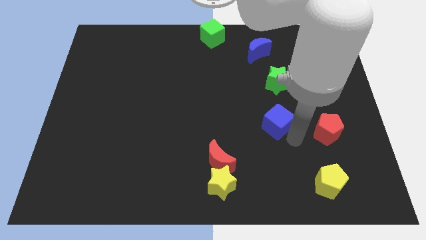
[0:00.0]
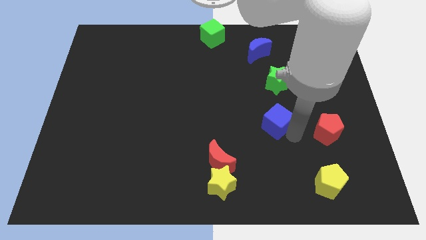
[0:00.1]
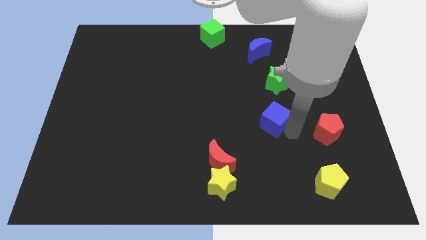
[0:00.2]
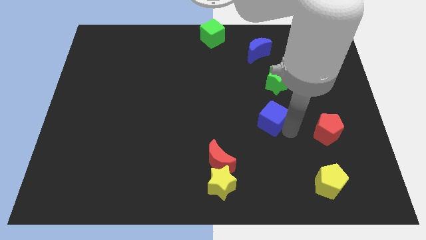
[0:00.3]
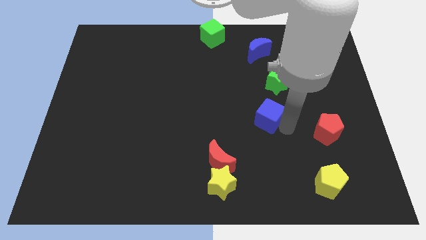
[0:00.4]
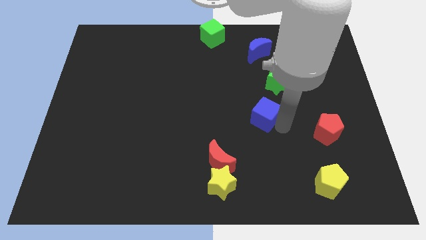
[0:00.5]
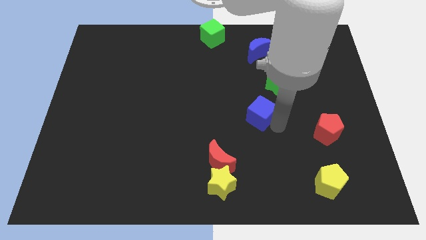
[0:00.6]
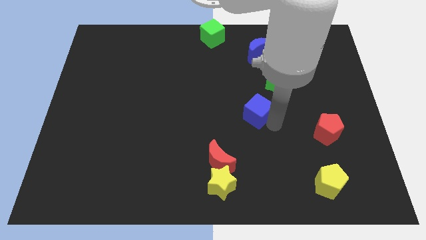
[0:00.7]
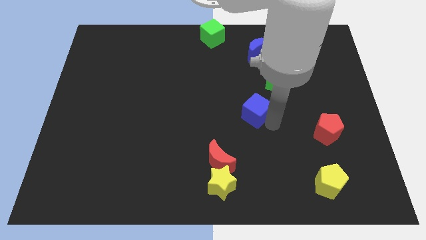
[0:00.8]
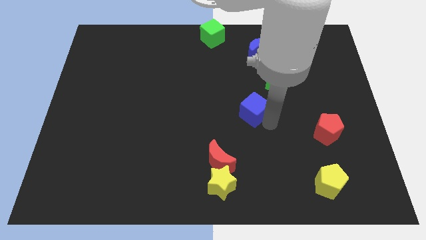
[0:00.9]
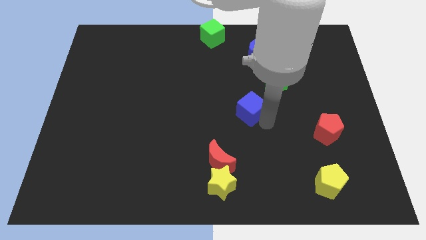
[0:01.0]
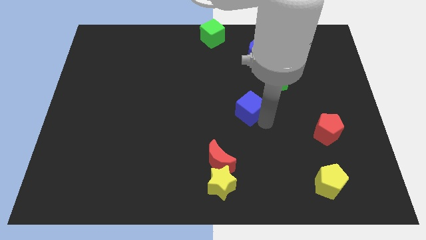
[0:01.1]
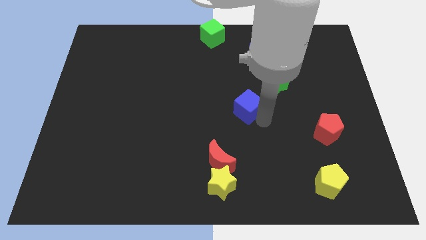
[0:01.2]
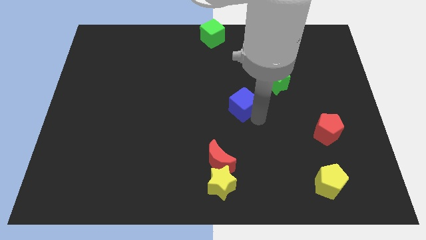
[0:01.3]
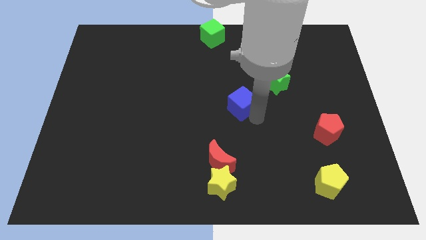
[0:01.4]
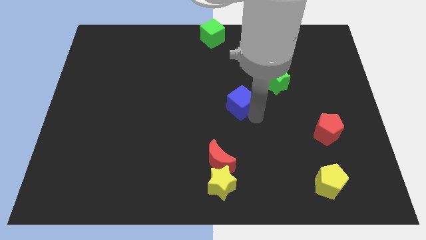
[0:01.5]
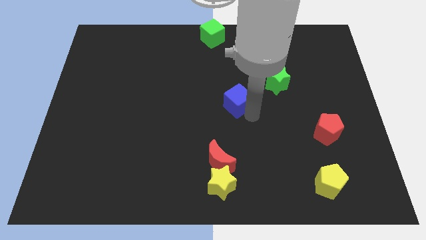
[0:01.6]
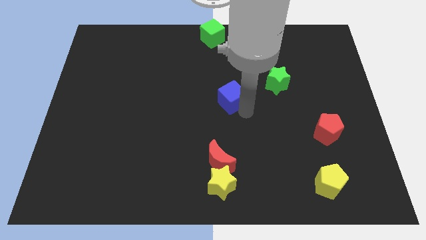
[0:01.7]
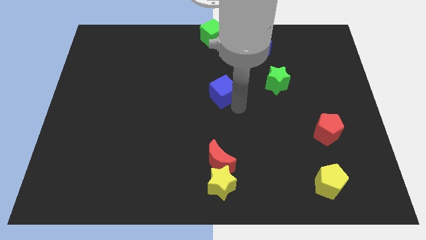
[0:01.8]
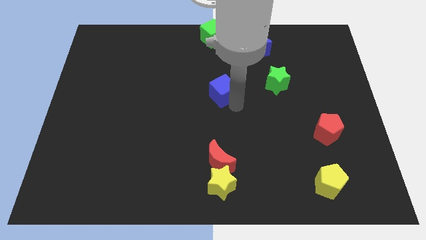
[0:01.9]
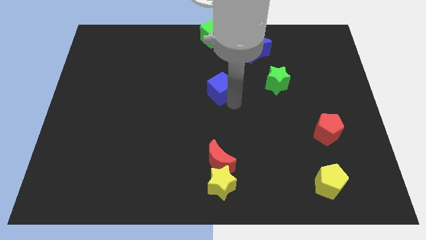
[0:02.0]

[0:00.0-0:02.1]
place the blue cube vertically above the red crescent

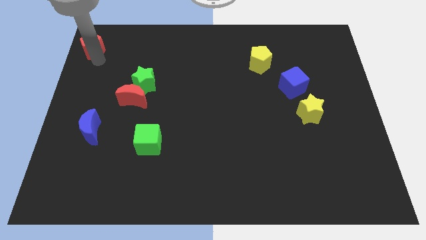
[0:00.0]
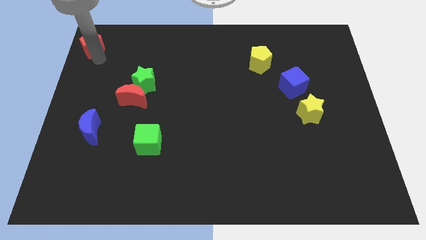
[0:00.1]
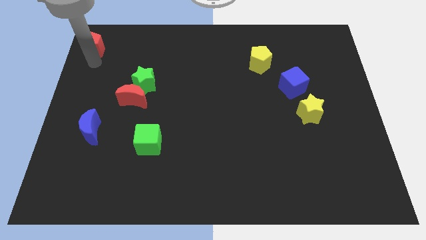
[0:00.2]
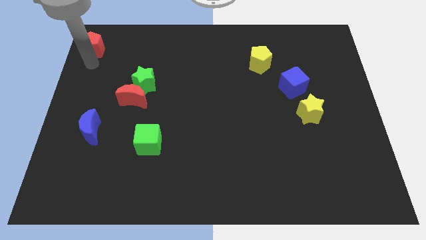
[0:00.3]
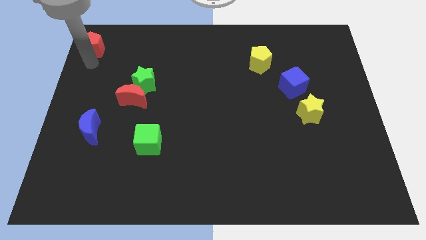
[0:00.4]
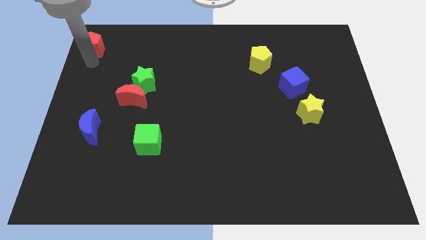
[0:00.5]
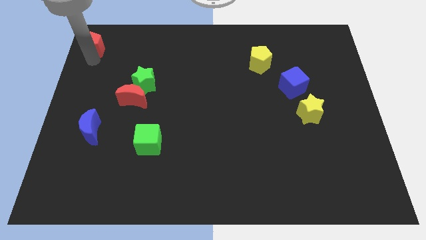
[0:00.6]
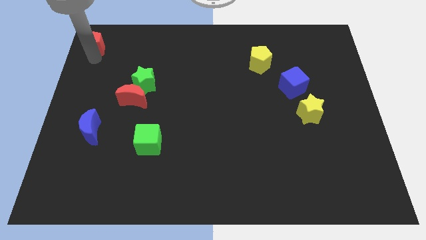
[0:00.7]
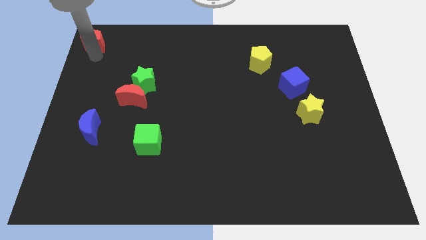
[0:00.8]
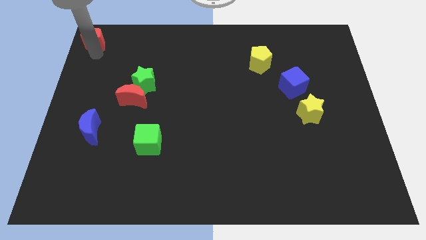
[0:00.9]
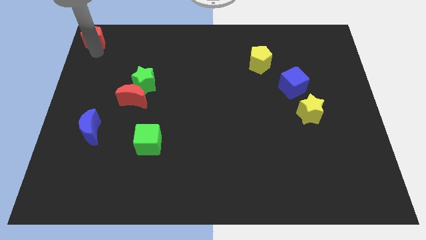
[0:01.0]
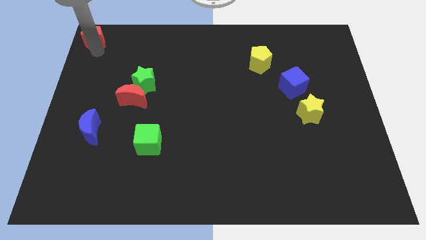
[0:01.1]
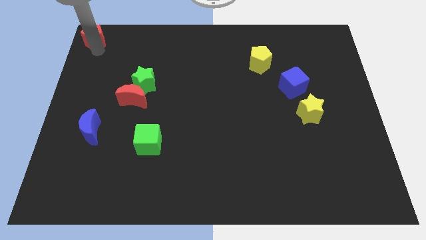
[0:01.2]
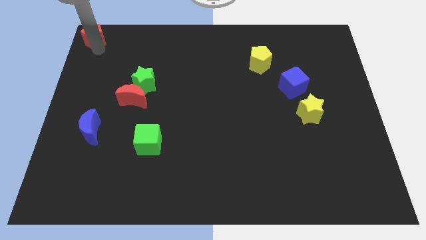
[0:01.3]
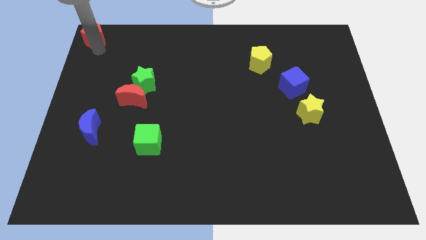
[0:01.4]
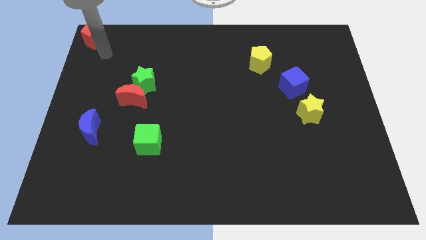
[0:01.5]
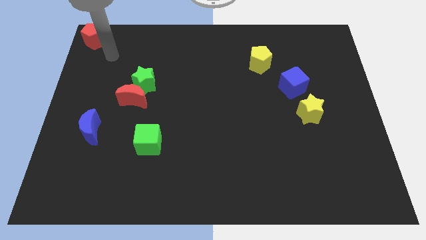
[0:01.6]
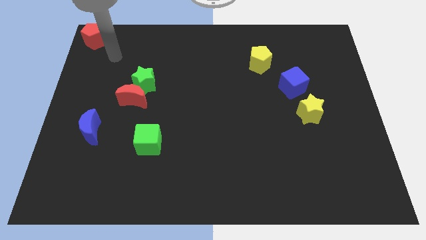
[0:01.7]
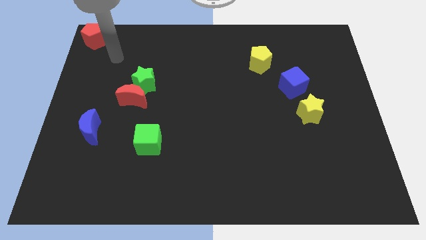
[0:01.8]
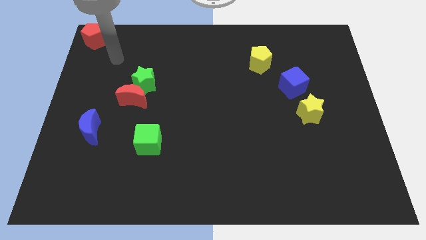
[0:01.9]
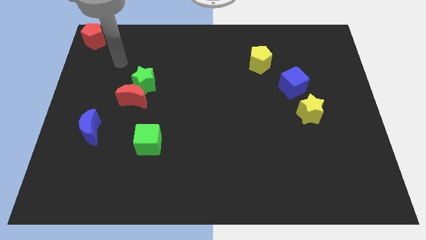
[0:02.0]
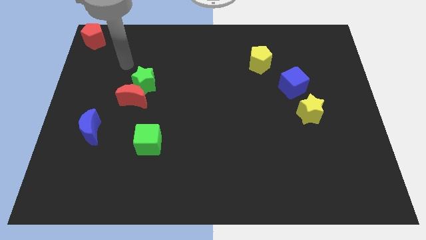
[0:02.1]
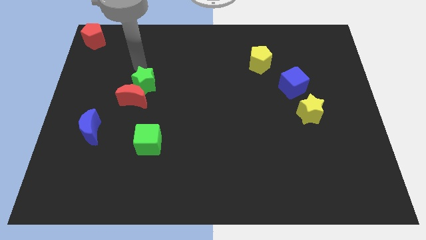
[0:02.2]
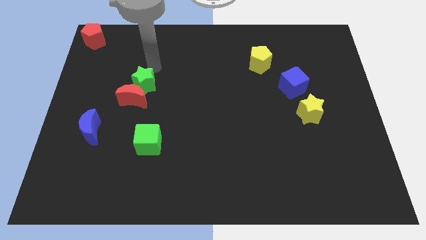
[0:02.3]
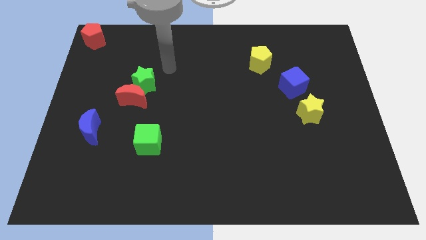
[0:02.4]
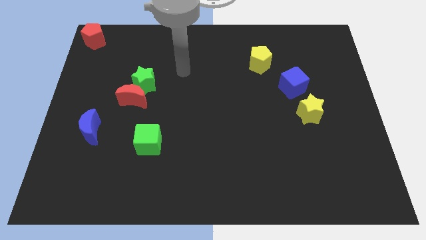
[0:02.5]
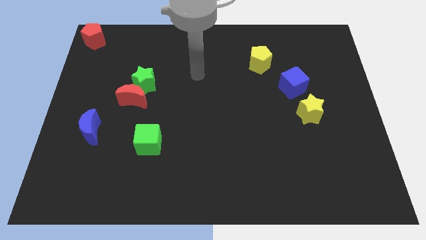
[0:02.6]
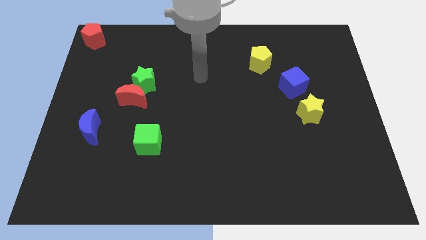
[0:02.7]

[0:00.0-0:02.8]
push the red pentagan towards the top left corner of the board

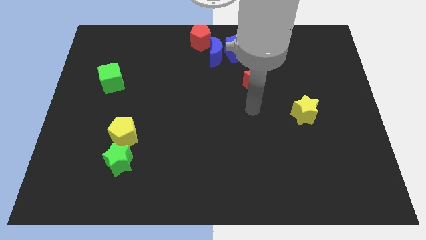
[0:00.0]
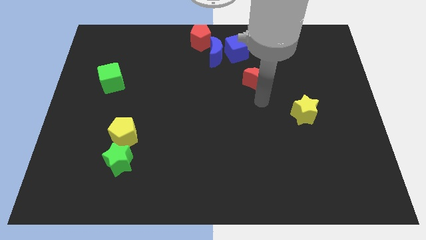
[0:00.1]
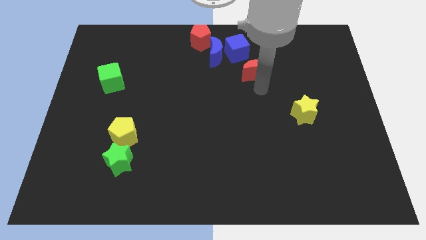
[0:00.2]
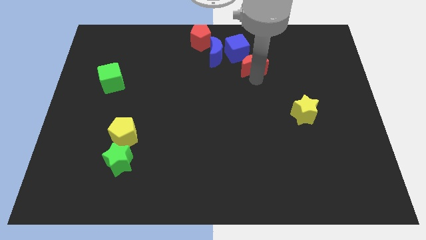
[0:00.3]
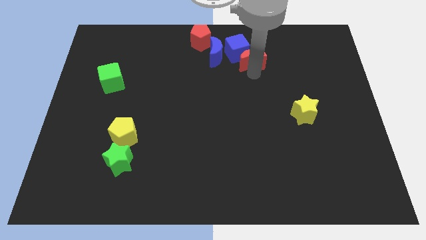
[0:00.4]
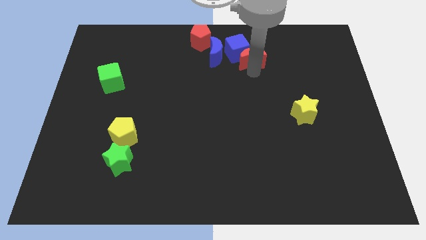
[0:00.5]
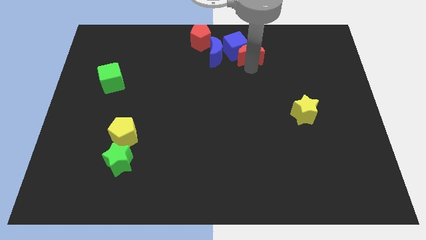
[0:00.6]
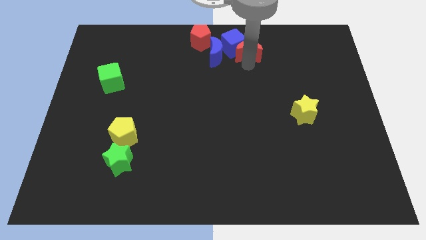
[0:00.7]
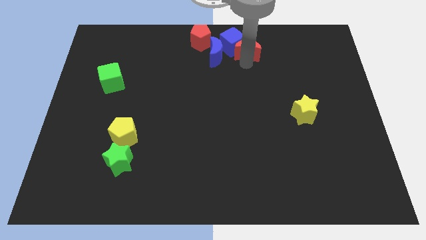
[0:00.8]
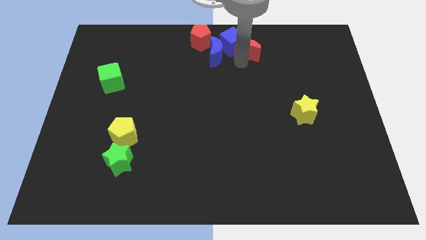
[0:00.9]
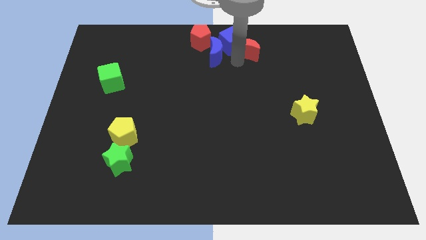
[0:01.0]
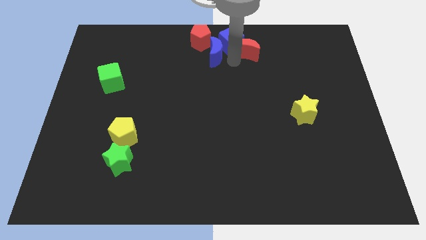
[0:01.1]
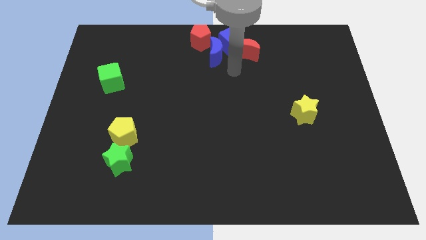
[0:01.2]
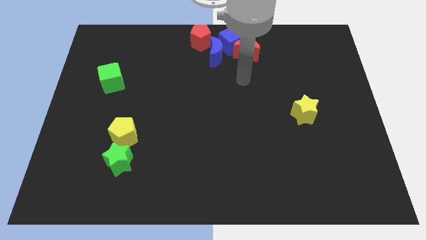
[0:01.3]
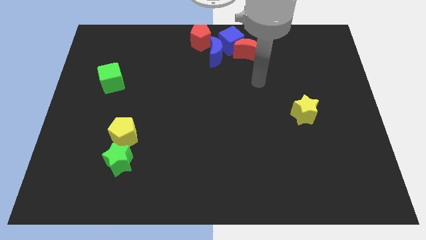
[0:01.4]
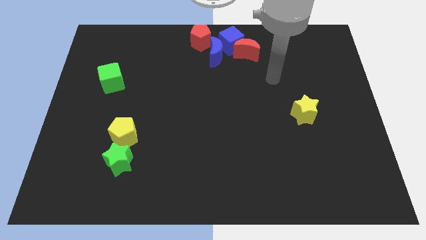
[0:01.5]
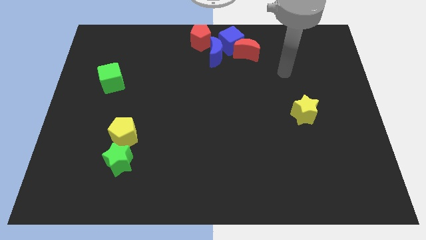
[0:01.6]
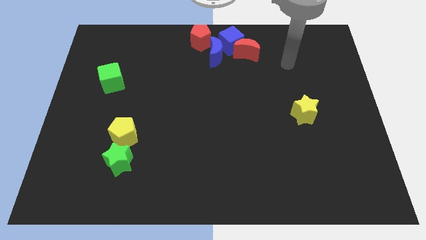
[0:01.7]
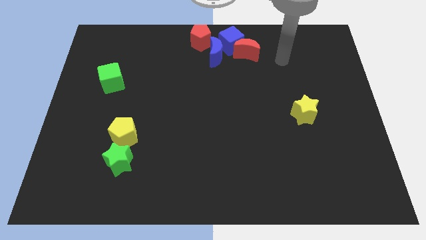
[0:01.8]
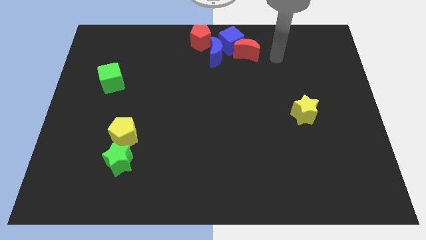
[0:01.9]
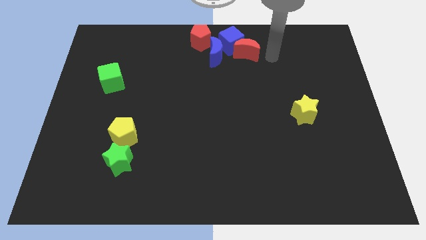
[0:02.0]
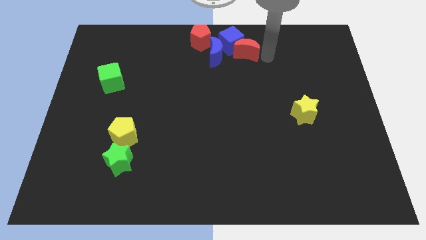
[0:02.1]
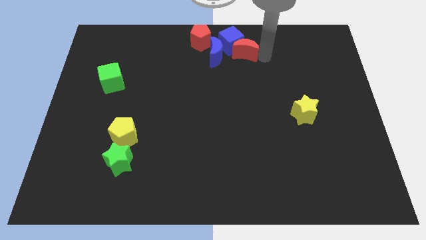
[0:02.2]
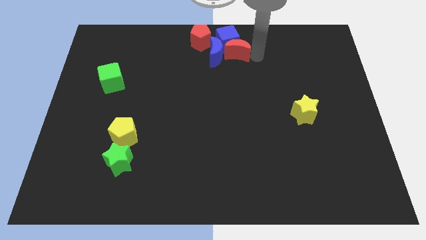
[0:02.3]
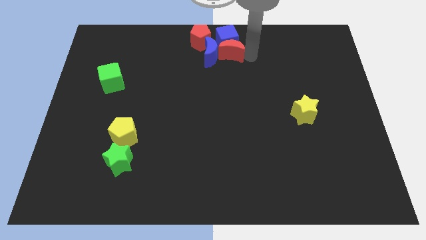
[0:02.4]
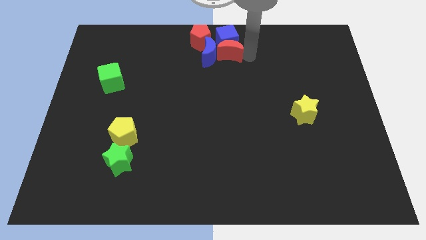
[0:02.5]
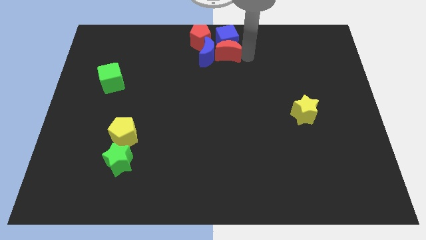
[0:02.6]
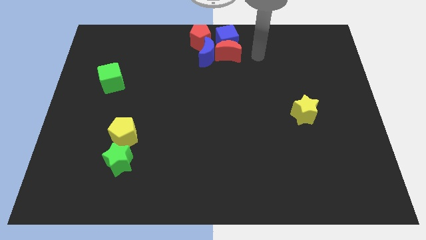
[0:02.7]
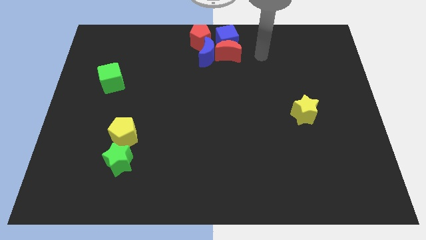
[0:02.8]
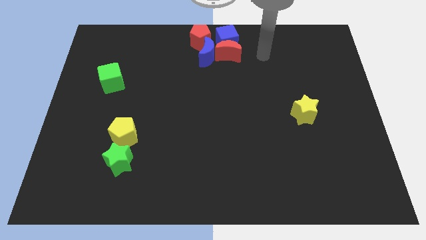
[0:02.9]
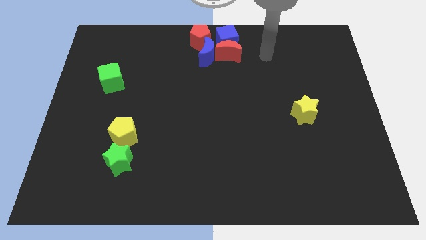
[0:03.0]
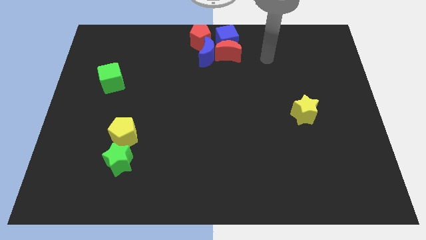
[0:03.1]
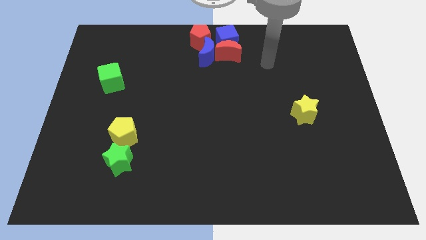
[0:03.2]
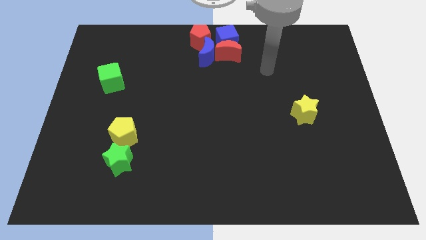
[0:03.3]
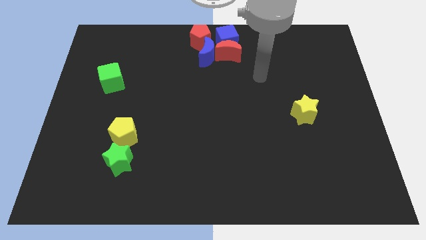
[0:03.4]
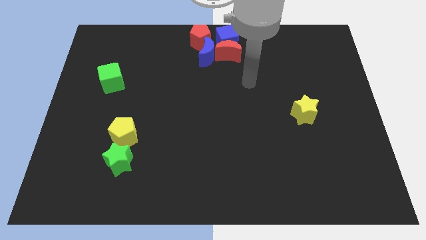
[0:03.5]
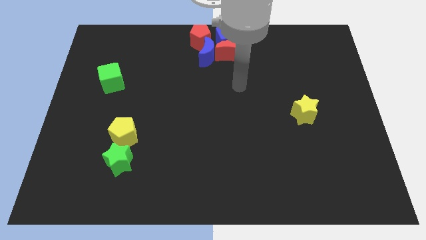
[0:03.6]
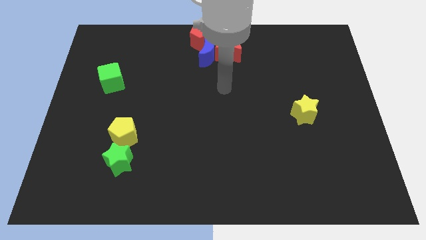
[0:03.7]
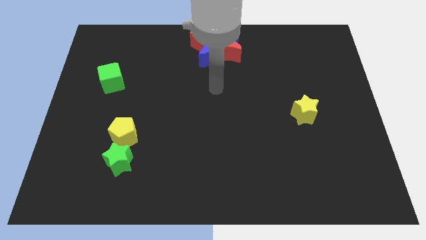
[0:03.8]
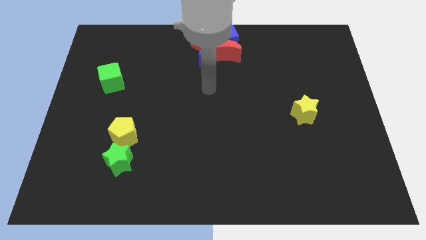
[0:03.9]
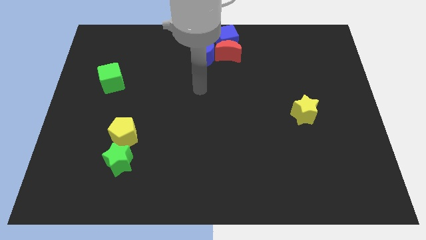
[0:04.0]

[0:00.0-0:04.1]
drag the red moon slightly upwards
